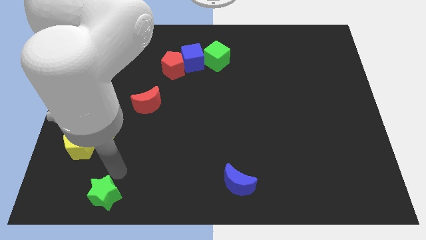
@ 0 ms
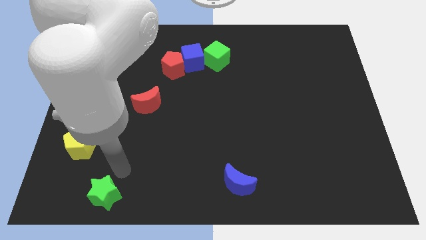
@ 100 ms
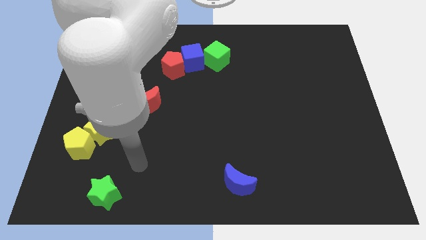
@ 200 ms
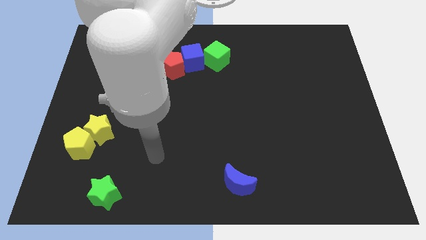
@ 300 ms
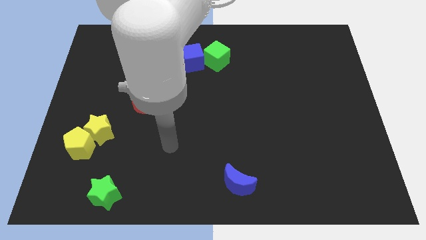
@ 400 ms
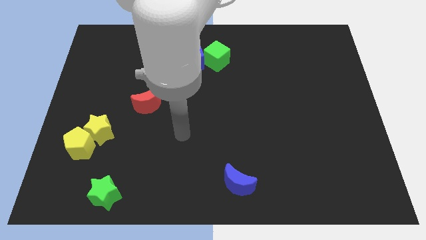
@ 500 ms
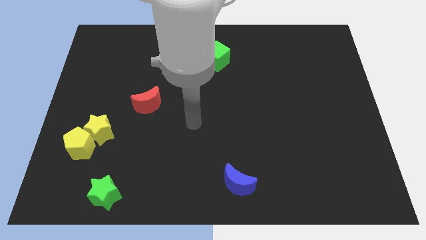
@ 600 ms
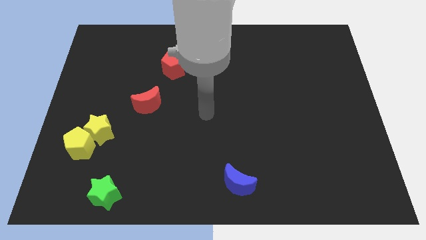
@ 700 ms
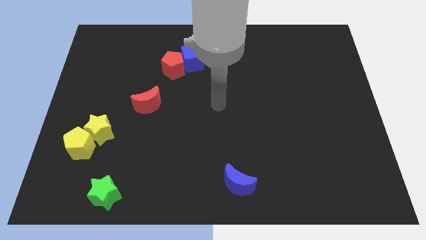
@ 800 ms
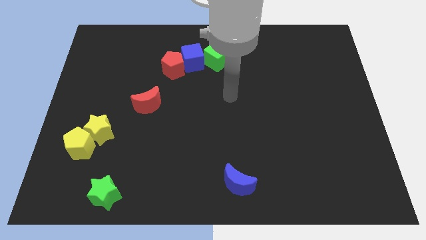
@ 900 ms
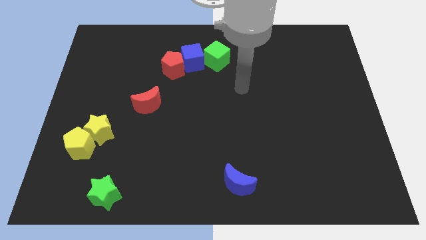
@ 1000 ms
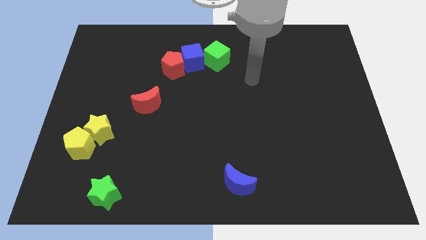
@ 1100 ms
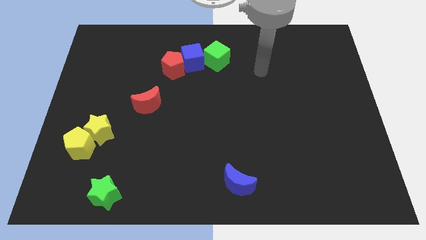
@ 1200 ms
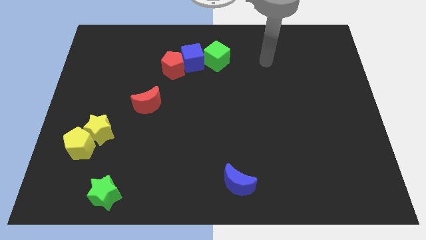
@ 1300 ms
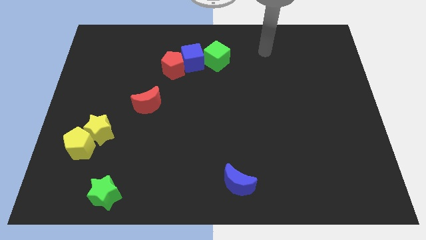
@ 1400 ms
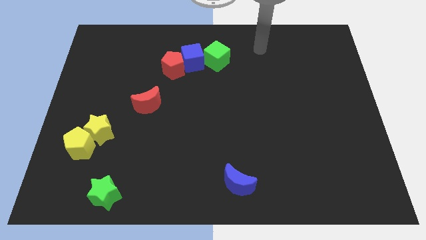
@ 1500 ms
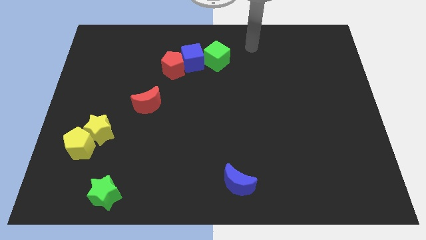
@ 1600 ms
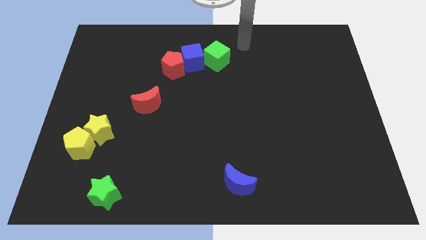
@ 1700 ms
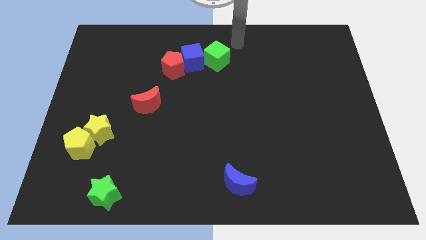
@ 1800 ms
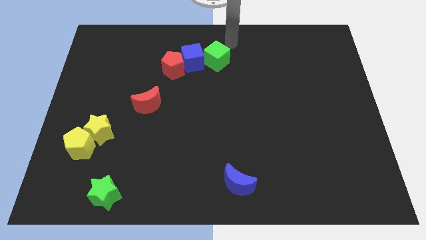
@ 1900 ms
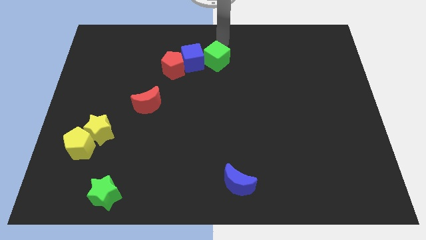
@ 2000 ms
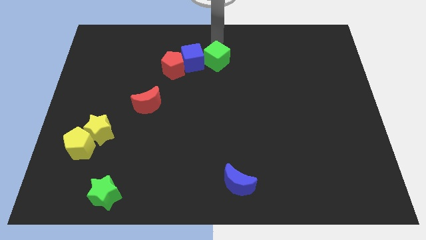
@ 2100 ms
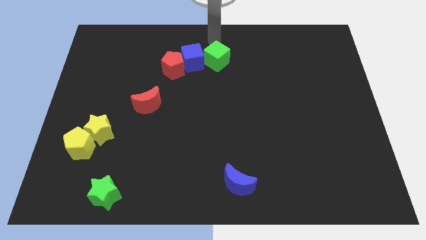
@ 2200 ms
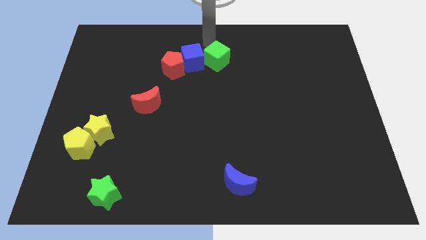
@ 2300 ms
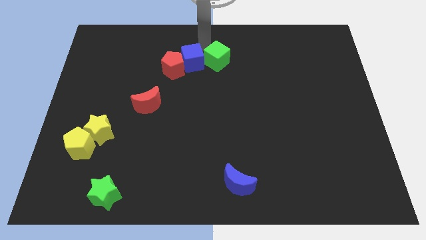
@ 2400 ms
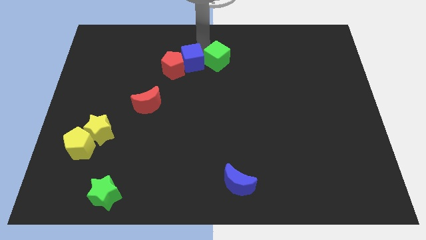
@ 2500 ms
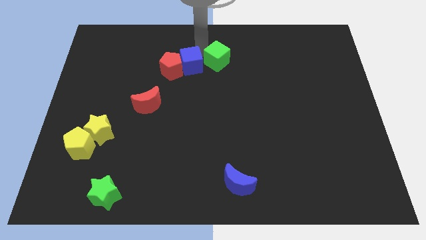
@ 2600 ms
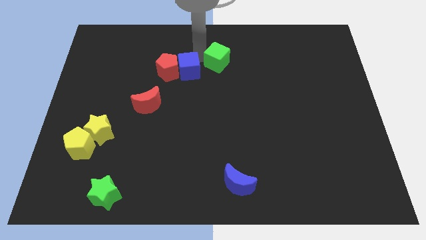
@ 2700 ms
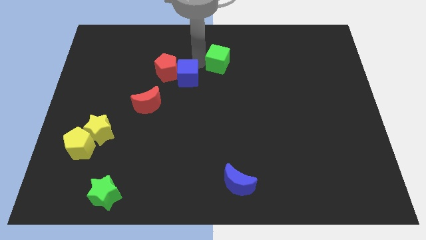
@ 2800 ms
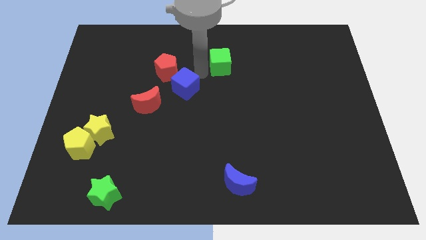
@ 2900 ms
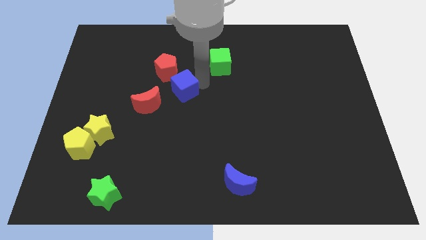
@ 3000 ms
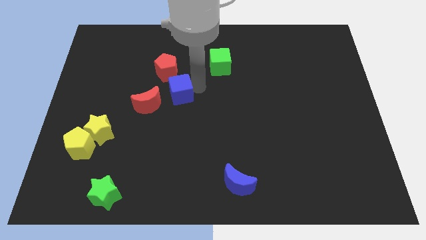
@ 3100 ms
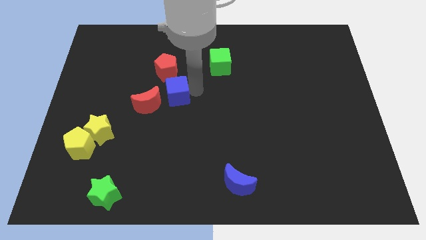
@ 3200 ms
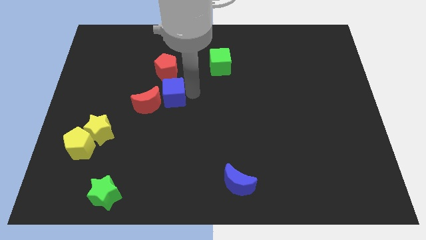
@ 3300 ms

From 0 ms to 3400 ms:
push blue cube slightly to the center

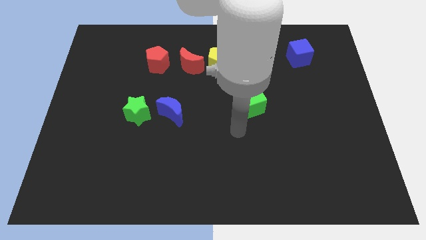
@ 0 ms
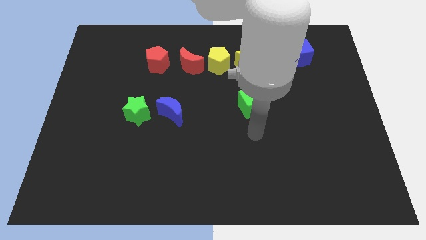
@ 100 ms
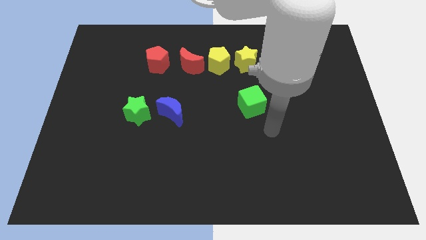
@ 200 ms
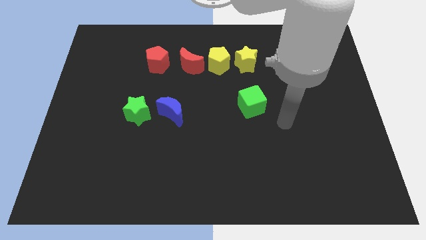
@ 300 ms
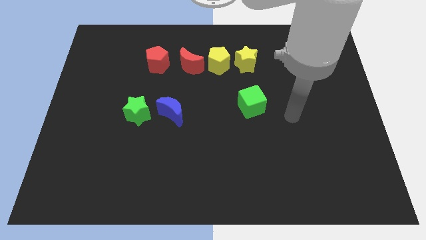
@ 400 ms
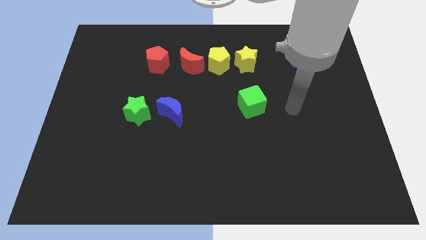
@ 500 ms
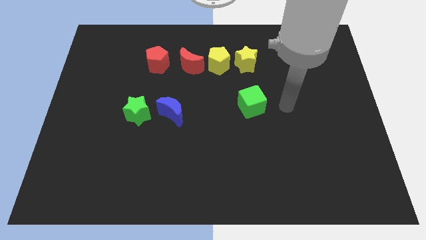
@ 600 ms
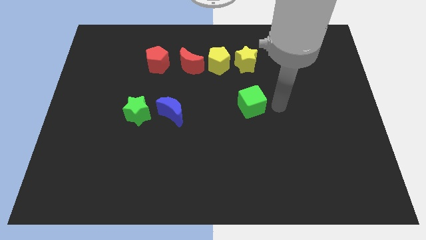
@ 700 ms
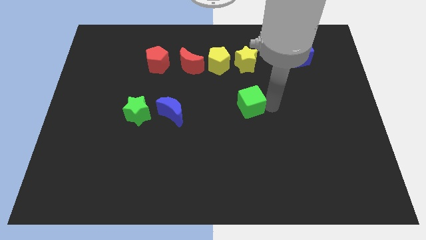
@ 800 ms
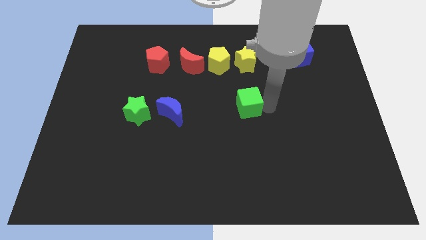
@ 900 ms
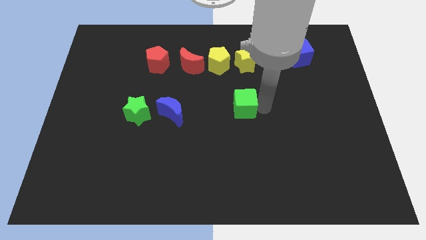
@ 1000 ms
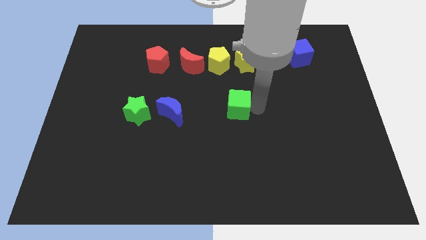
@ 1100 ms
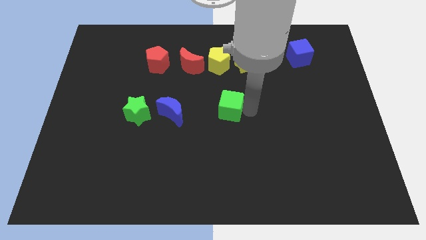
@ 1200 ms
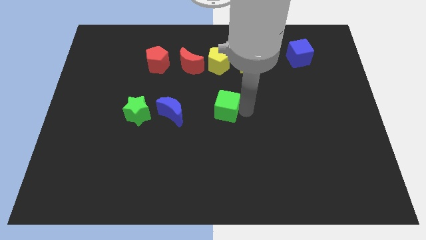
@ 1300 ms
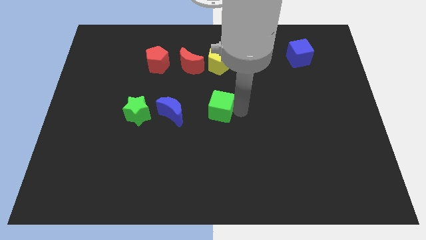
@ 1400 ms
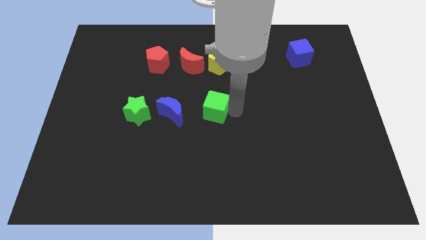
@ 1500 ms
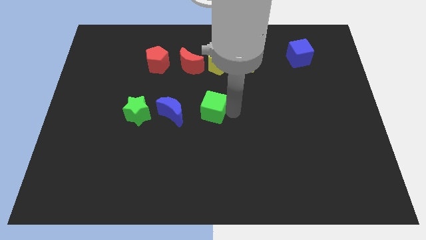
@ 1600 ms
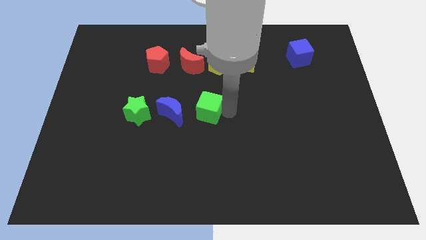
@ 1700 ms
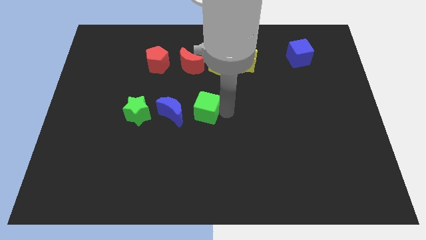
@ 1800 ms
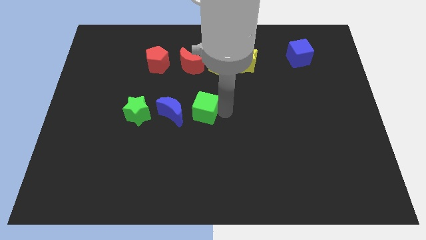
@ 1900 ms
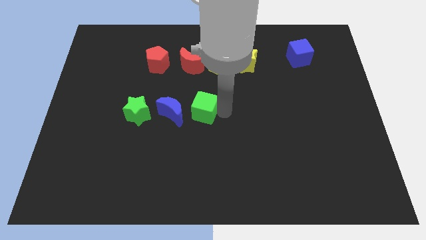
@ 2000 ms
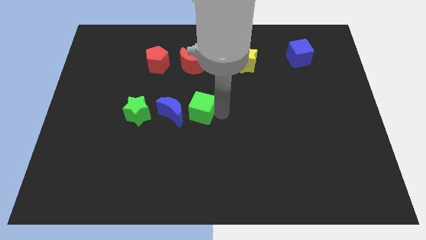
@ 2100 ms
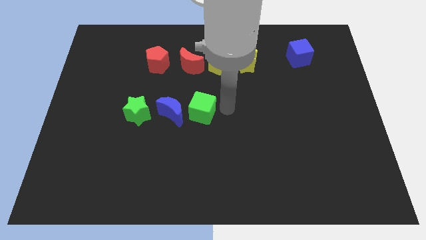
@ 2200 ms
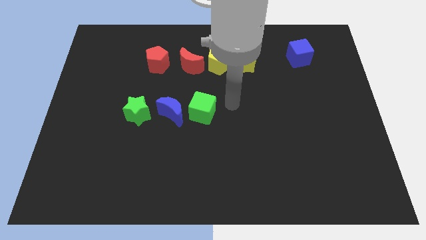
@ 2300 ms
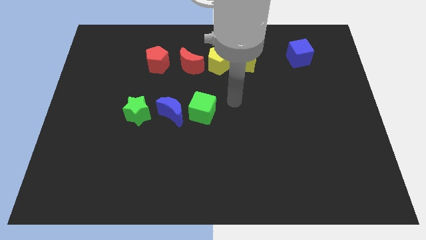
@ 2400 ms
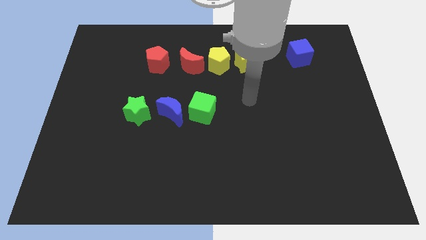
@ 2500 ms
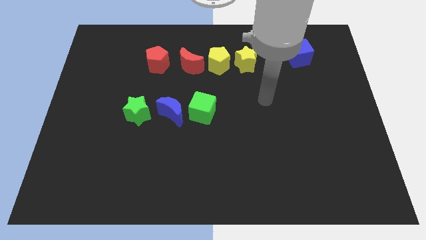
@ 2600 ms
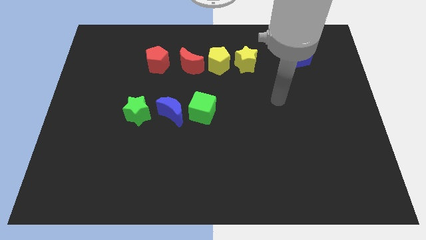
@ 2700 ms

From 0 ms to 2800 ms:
put the green cube right of the blue moon

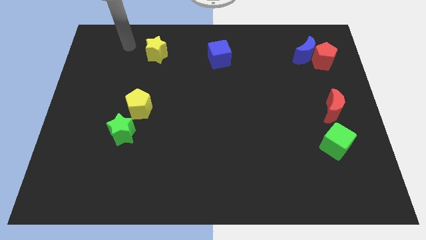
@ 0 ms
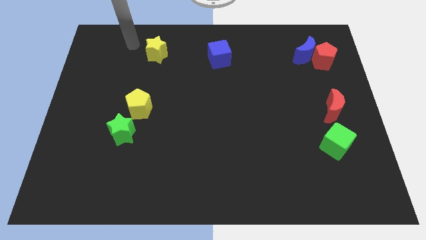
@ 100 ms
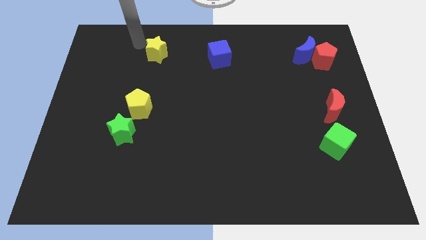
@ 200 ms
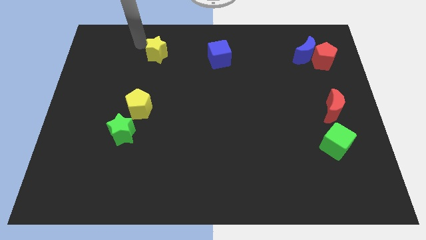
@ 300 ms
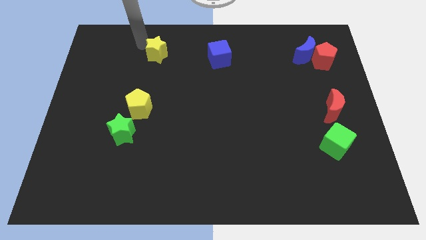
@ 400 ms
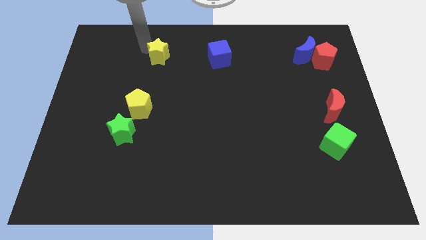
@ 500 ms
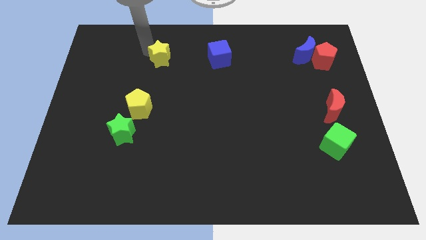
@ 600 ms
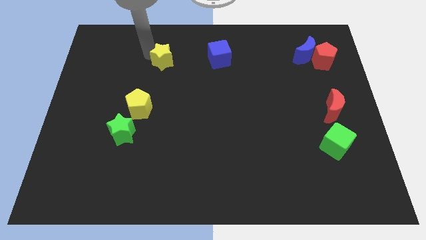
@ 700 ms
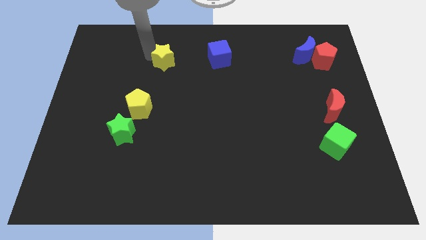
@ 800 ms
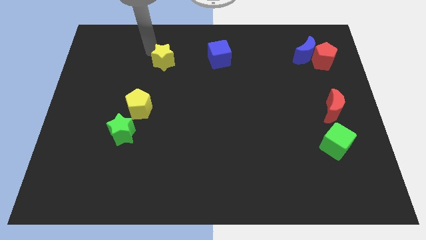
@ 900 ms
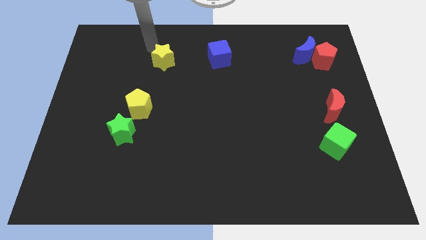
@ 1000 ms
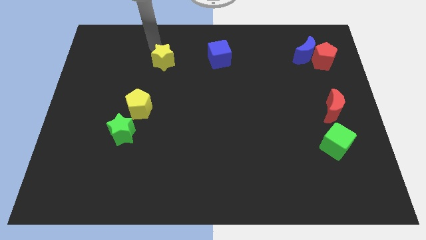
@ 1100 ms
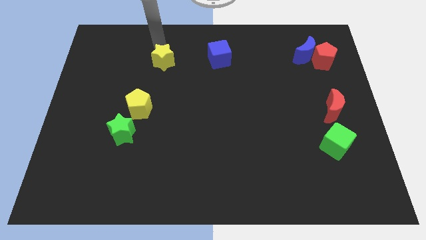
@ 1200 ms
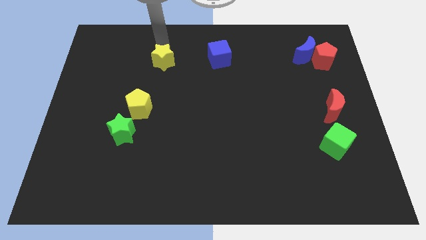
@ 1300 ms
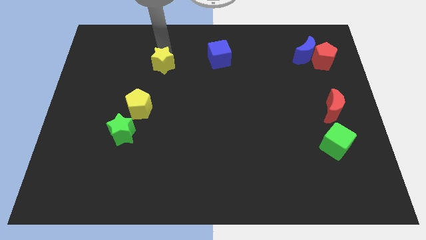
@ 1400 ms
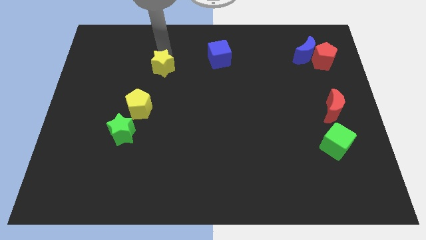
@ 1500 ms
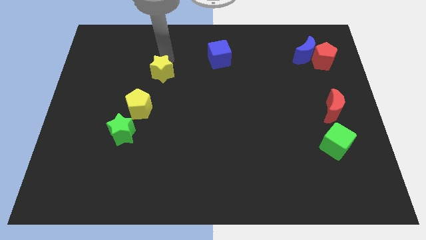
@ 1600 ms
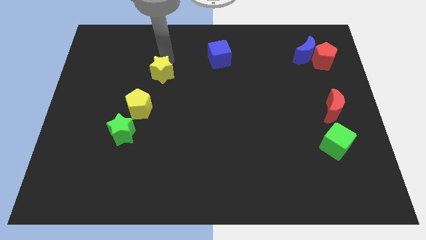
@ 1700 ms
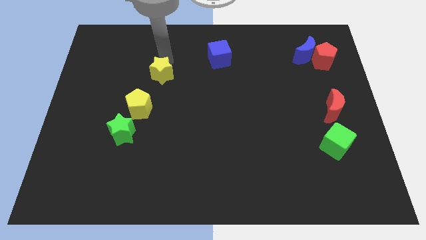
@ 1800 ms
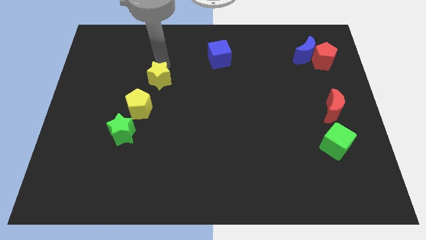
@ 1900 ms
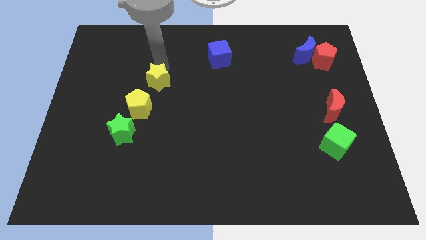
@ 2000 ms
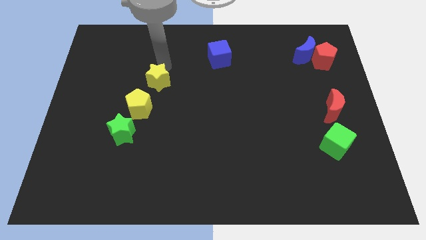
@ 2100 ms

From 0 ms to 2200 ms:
move the yellow star towards yellow pentagon

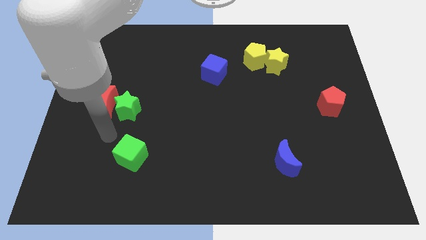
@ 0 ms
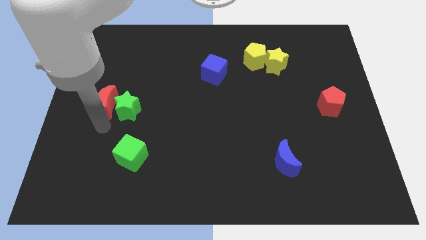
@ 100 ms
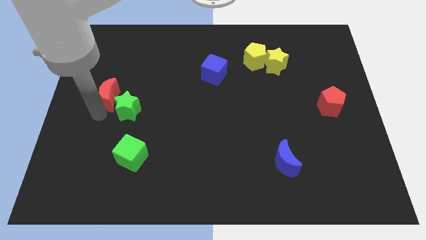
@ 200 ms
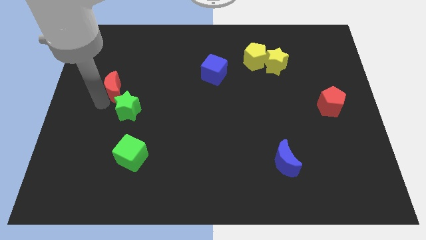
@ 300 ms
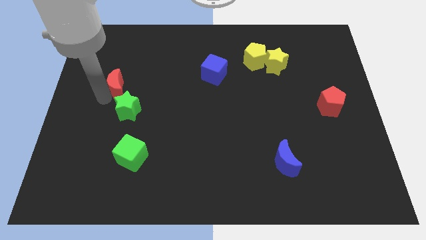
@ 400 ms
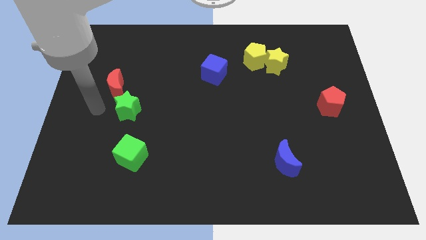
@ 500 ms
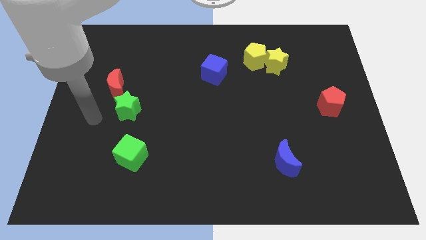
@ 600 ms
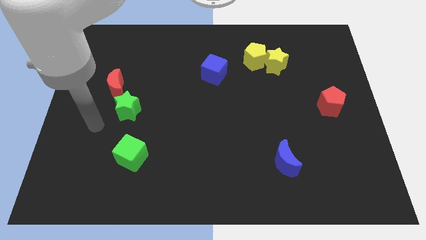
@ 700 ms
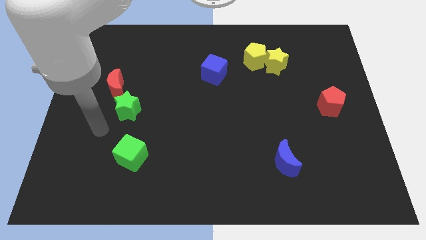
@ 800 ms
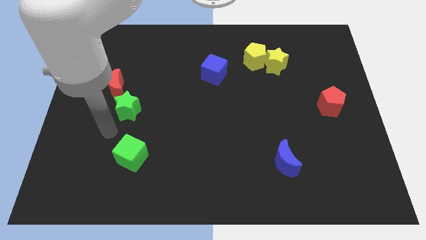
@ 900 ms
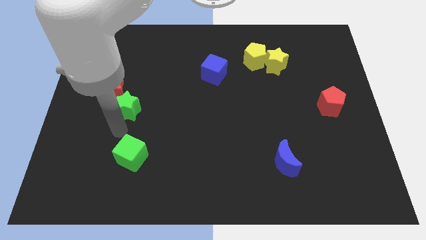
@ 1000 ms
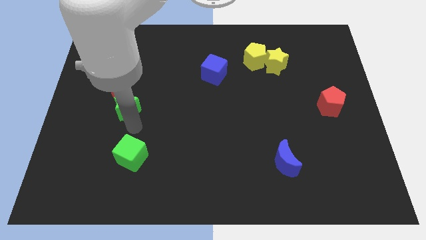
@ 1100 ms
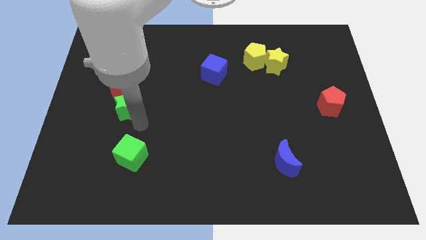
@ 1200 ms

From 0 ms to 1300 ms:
drag the red moon vertically to the top left of the green star
